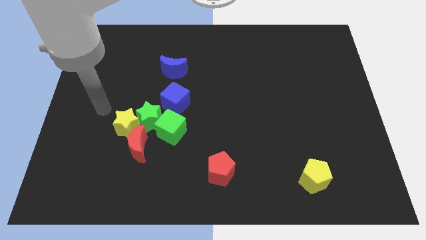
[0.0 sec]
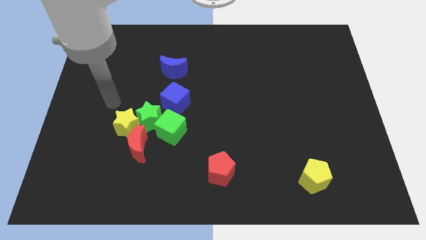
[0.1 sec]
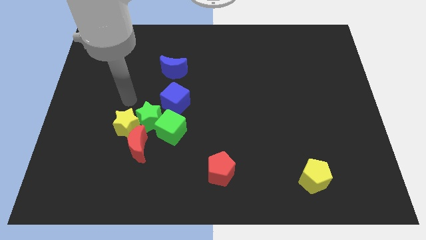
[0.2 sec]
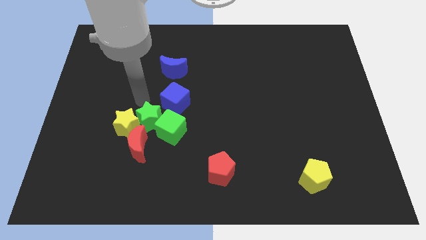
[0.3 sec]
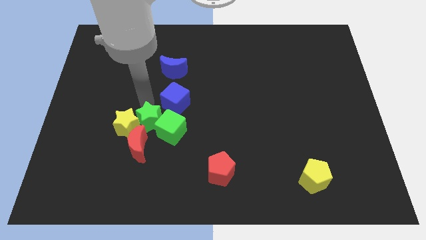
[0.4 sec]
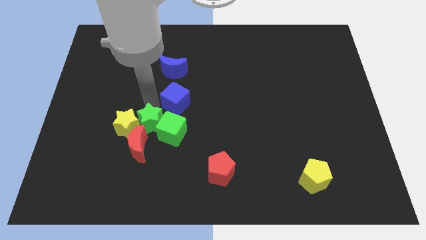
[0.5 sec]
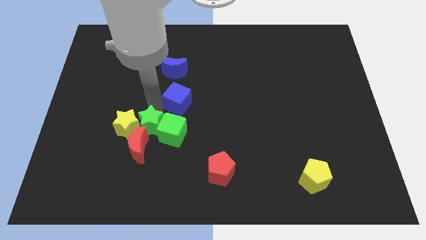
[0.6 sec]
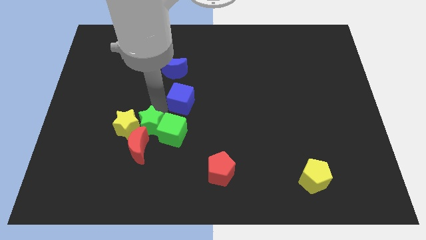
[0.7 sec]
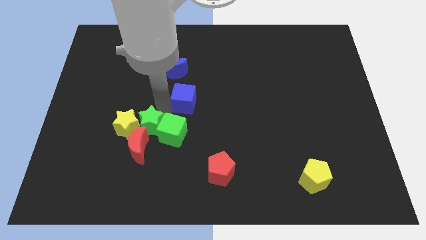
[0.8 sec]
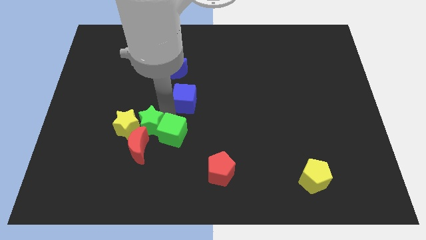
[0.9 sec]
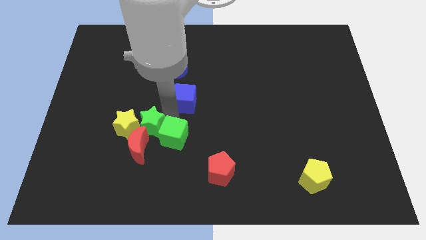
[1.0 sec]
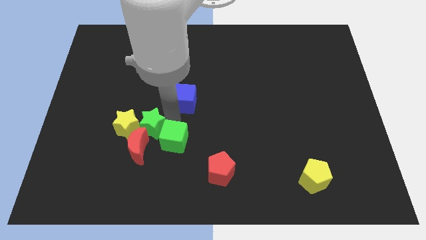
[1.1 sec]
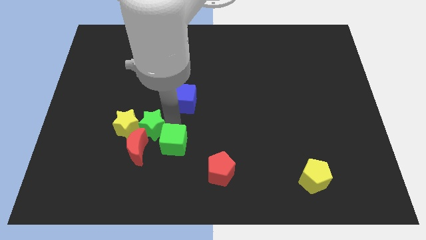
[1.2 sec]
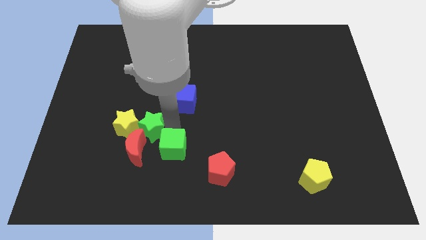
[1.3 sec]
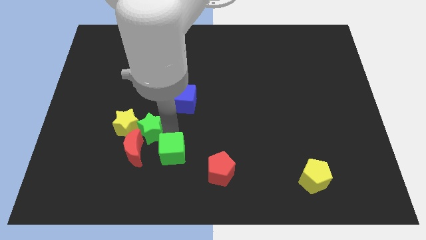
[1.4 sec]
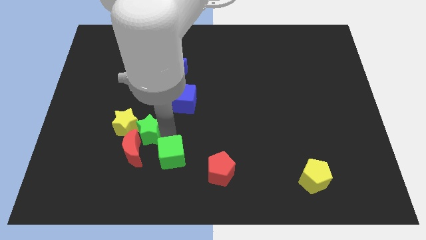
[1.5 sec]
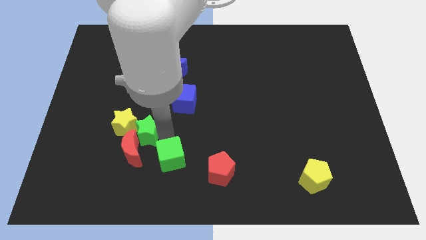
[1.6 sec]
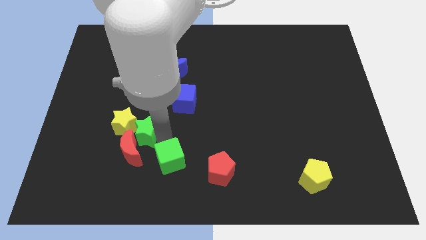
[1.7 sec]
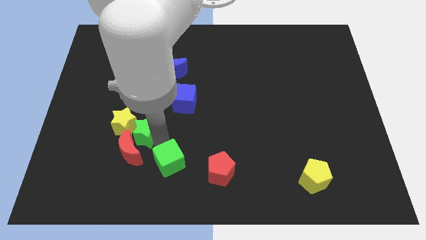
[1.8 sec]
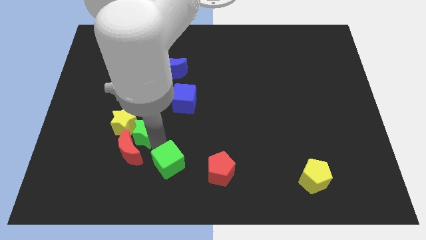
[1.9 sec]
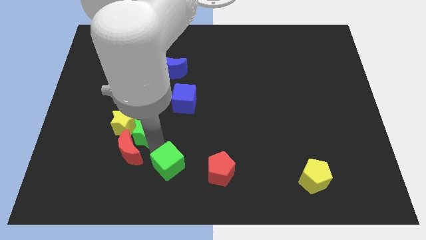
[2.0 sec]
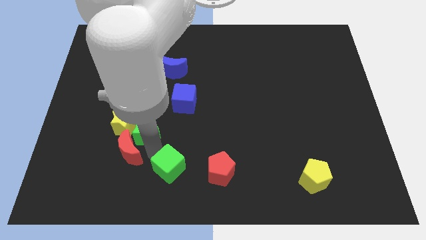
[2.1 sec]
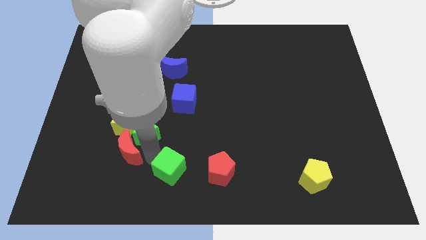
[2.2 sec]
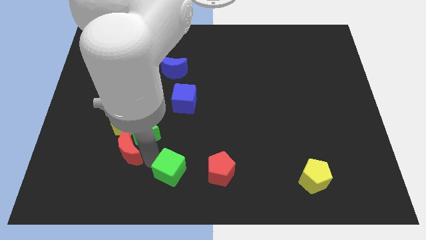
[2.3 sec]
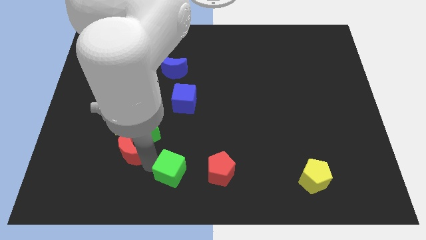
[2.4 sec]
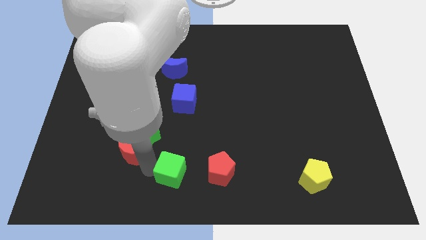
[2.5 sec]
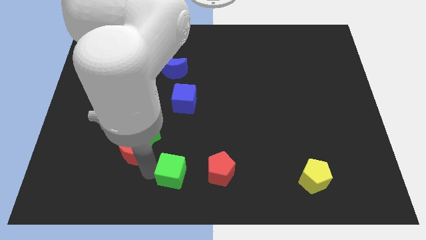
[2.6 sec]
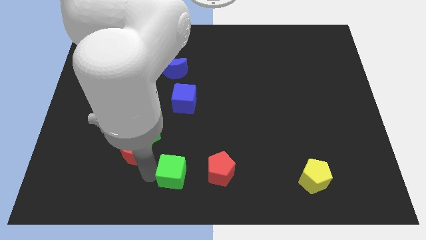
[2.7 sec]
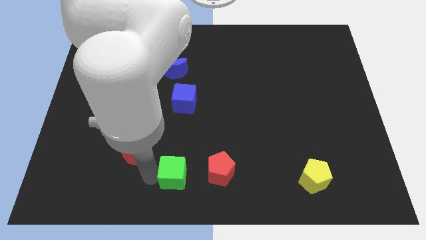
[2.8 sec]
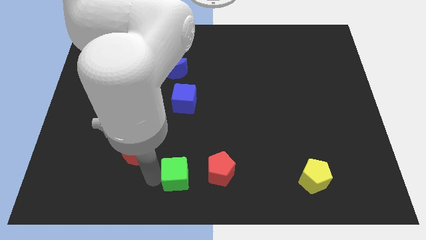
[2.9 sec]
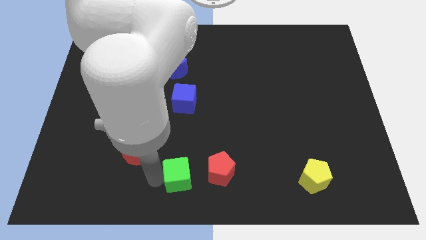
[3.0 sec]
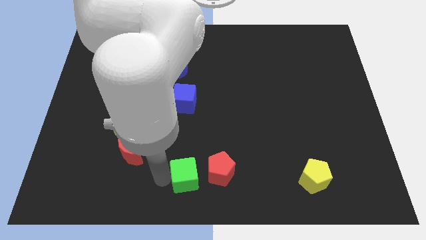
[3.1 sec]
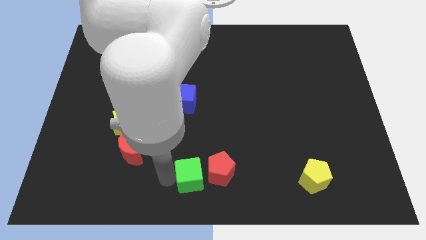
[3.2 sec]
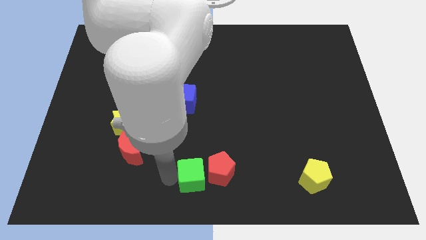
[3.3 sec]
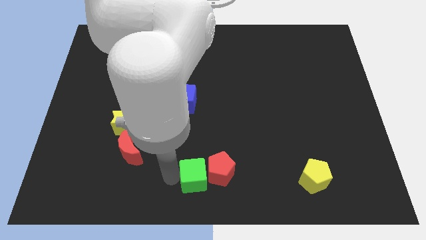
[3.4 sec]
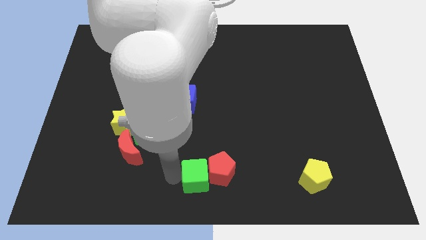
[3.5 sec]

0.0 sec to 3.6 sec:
move the green cube next to the red pentagon

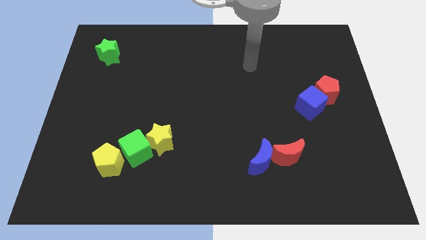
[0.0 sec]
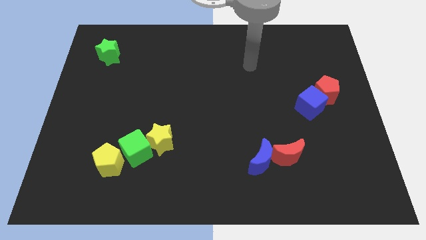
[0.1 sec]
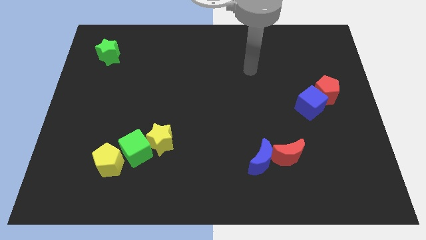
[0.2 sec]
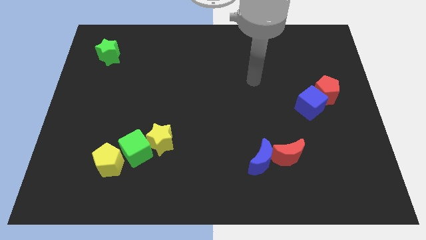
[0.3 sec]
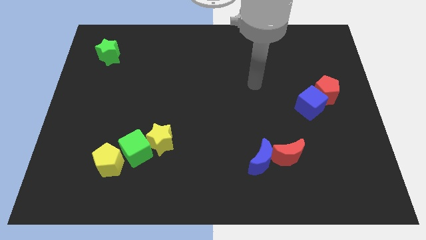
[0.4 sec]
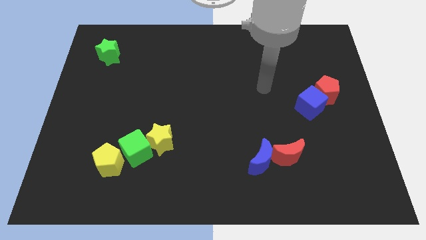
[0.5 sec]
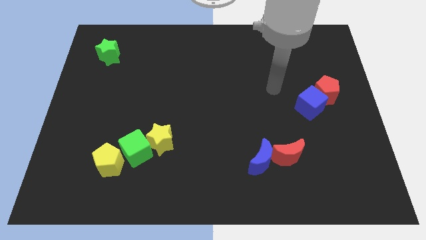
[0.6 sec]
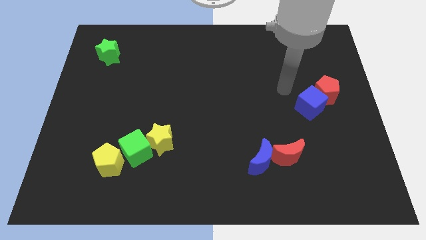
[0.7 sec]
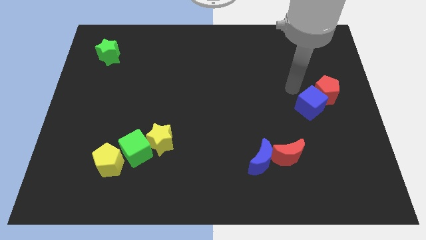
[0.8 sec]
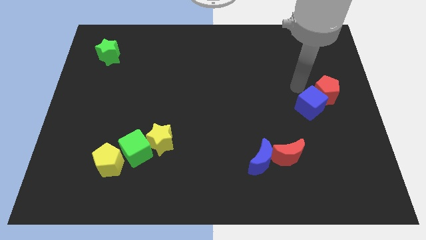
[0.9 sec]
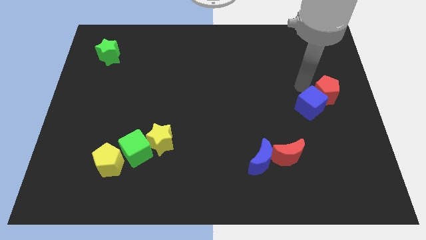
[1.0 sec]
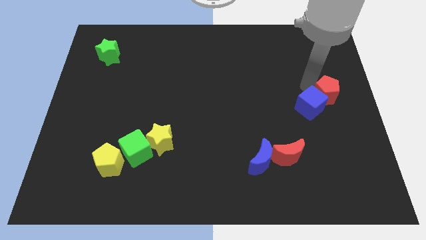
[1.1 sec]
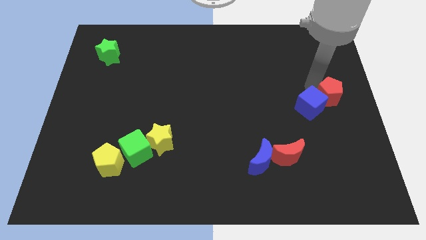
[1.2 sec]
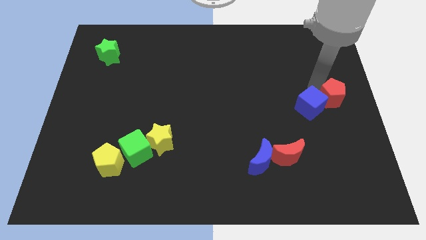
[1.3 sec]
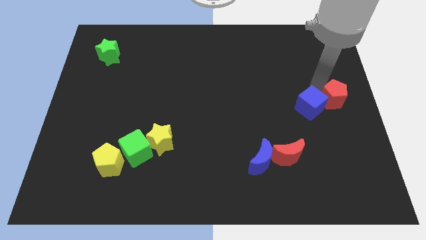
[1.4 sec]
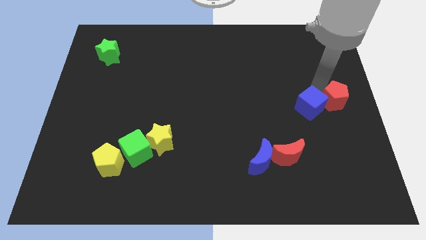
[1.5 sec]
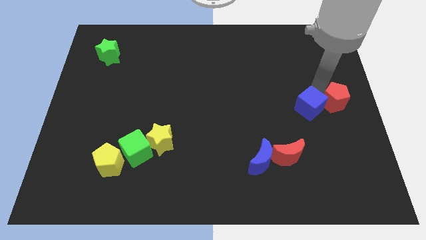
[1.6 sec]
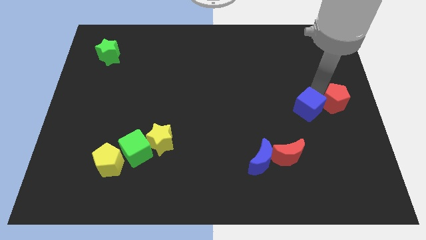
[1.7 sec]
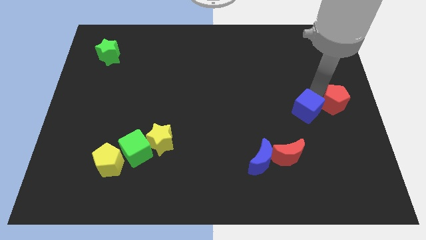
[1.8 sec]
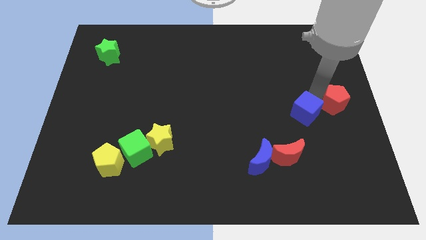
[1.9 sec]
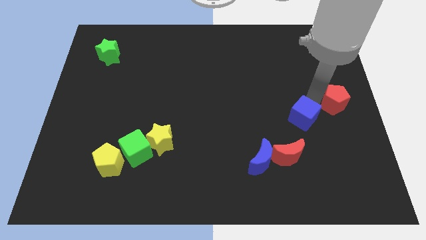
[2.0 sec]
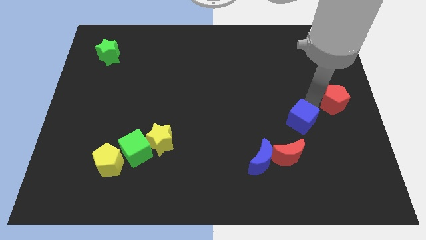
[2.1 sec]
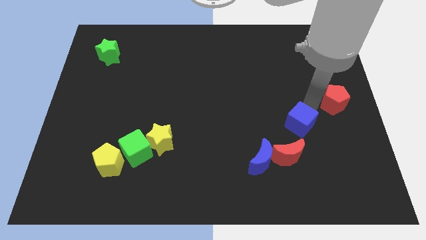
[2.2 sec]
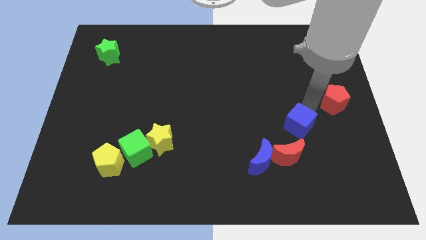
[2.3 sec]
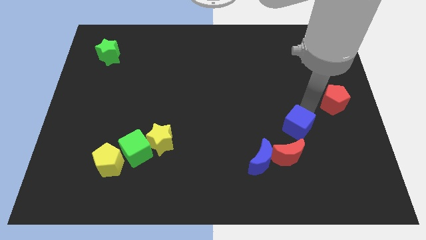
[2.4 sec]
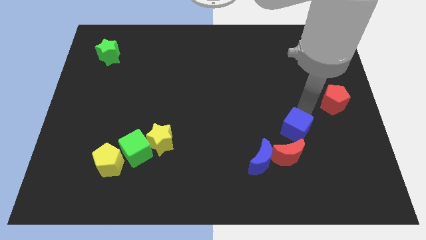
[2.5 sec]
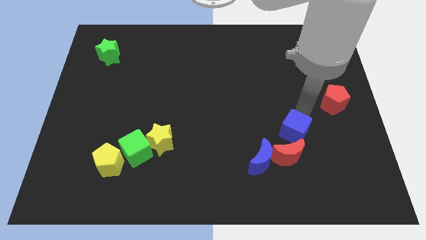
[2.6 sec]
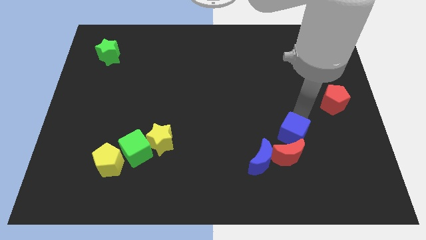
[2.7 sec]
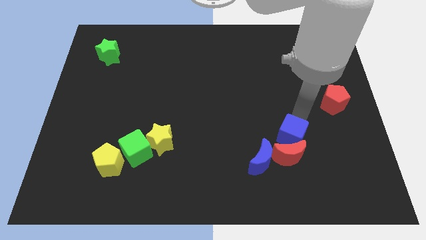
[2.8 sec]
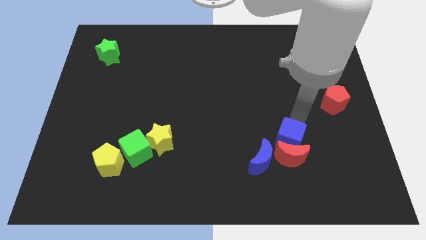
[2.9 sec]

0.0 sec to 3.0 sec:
move the blue cube towards the red moon

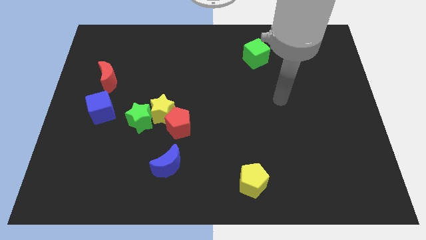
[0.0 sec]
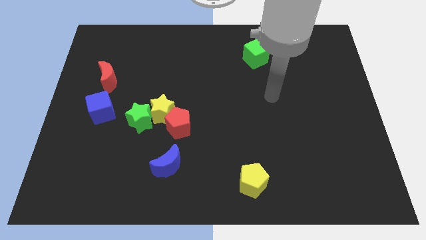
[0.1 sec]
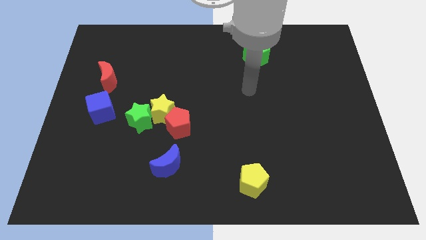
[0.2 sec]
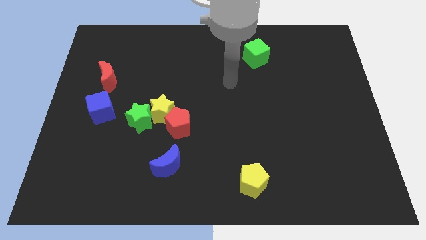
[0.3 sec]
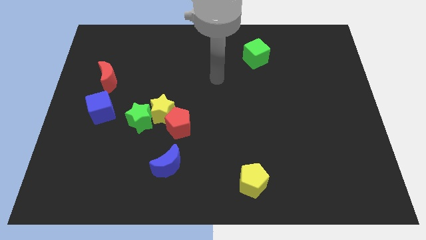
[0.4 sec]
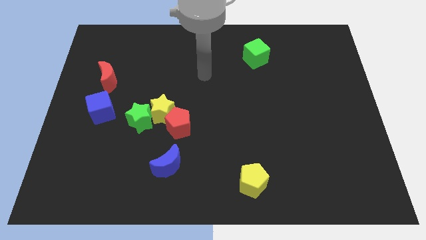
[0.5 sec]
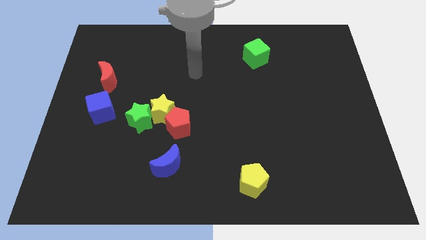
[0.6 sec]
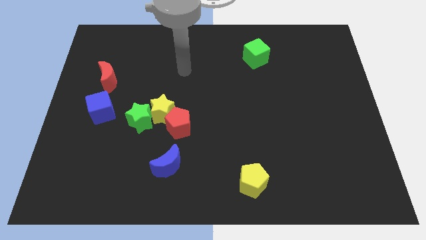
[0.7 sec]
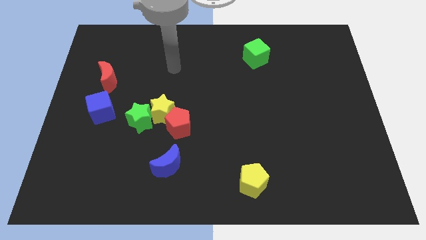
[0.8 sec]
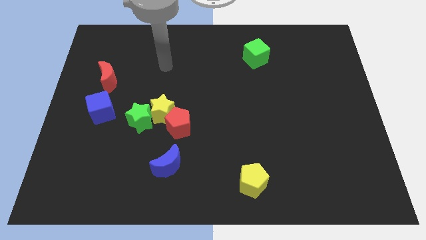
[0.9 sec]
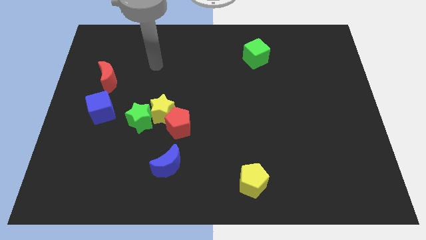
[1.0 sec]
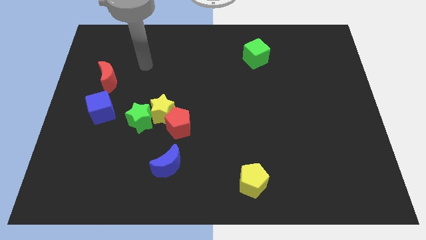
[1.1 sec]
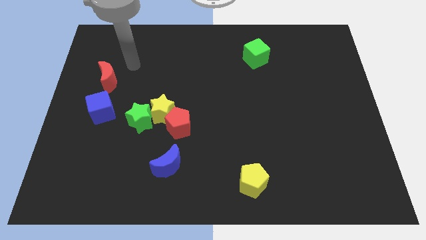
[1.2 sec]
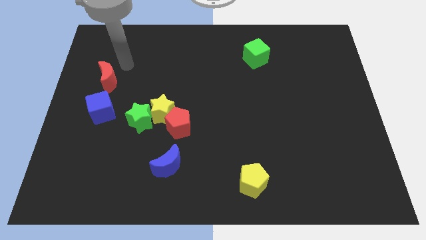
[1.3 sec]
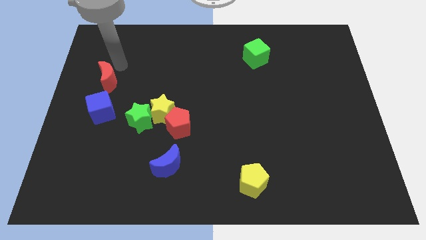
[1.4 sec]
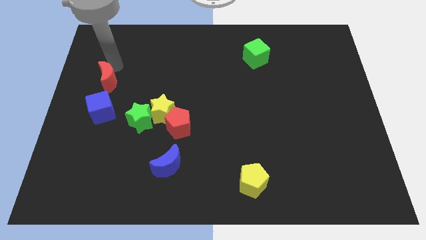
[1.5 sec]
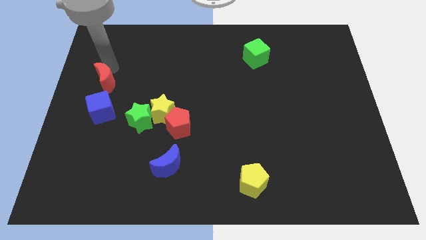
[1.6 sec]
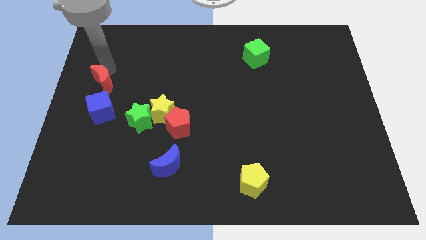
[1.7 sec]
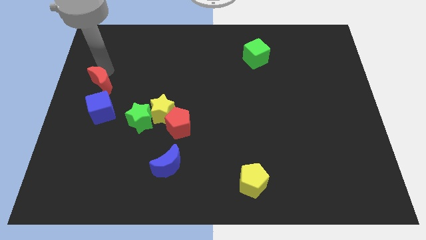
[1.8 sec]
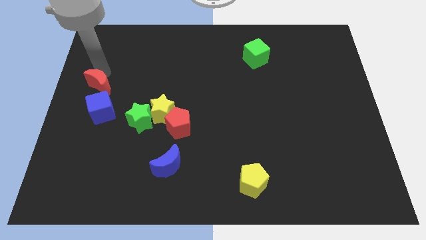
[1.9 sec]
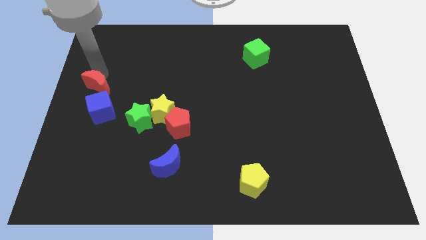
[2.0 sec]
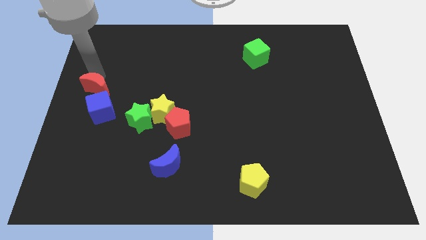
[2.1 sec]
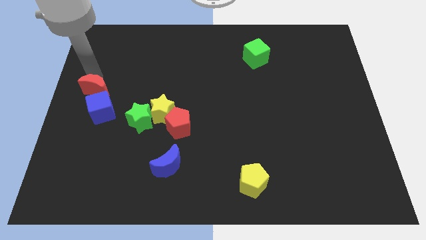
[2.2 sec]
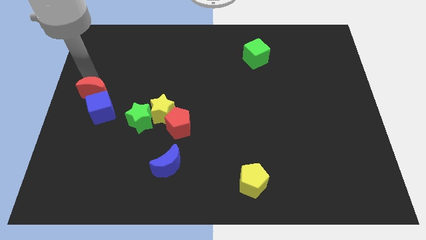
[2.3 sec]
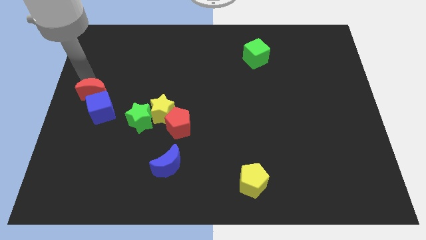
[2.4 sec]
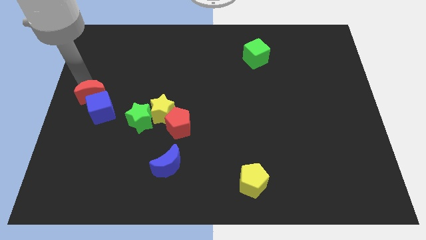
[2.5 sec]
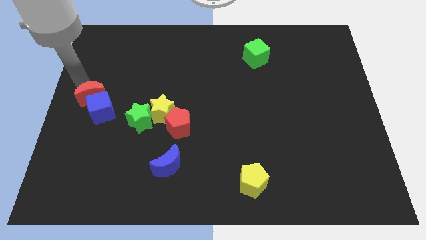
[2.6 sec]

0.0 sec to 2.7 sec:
put the red moon to the blue cube
